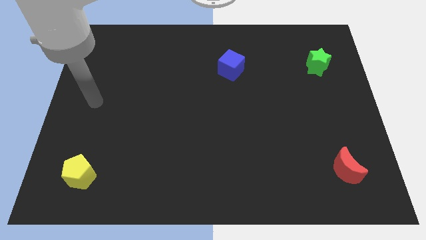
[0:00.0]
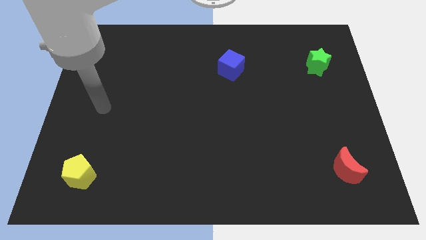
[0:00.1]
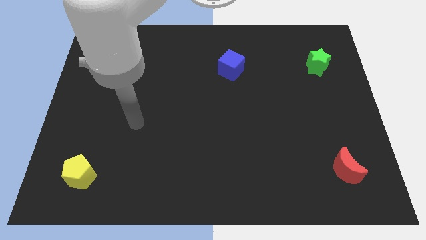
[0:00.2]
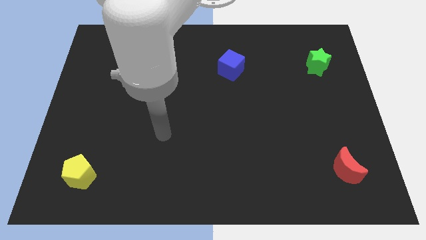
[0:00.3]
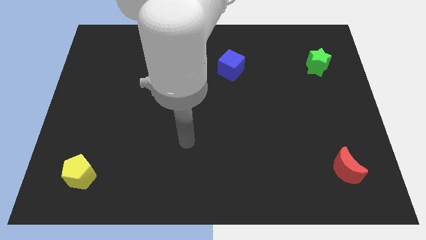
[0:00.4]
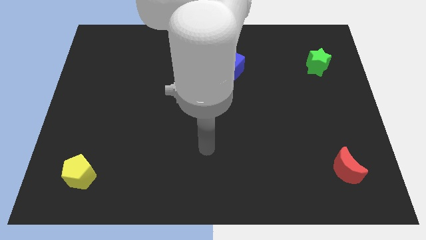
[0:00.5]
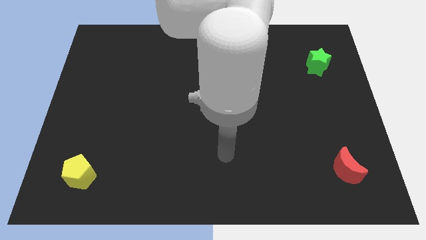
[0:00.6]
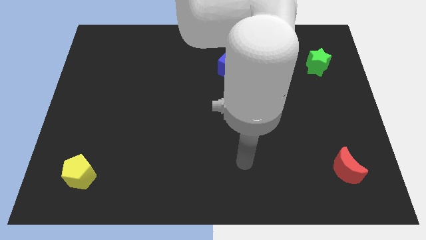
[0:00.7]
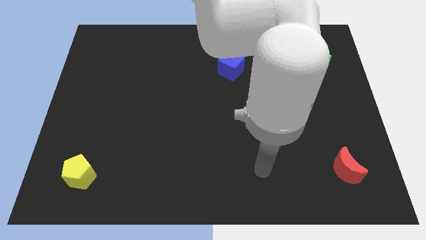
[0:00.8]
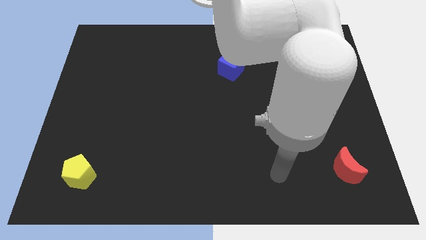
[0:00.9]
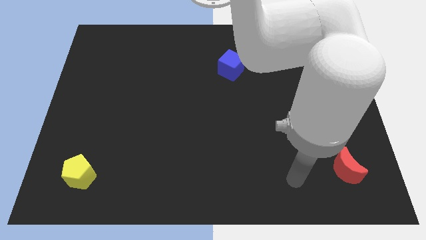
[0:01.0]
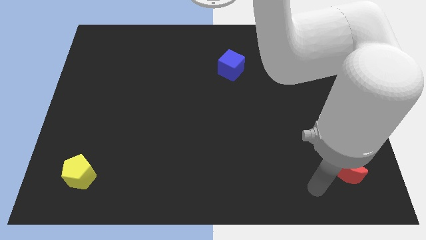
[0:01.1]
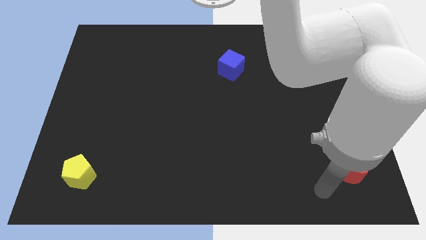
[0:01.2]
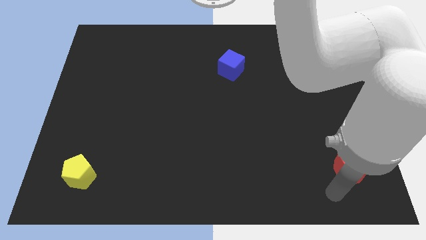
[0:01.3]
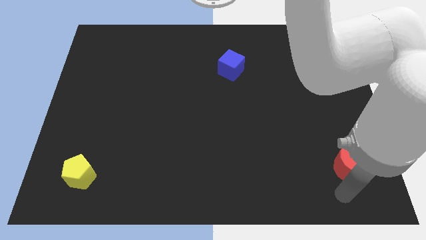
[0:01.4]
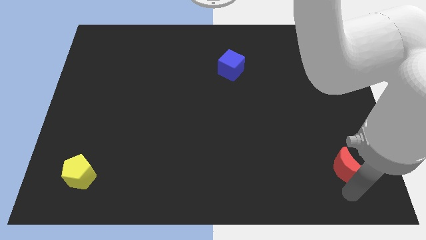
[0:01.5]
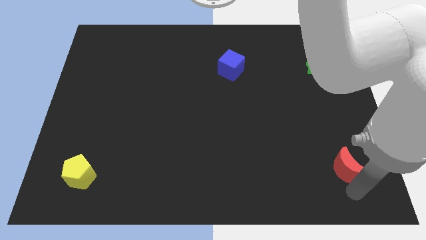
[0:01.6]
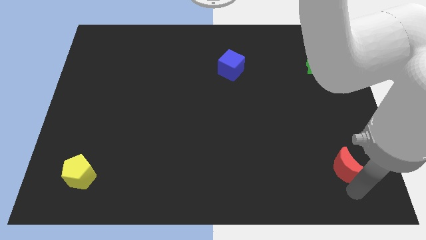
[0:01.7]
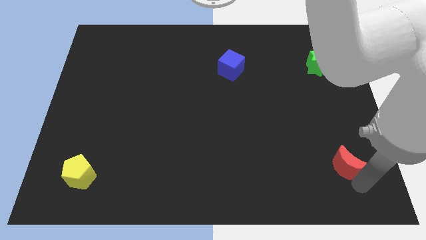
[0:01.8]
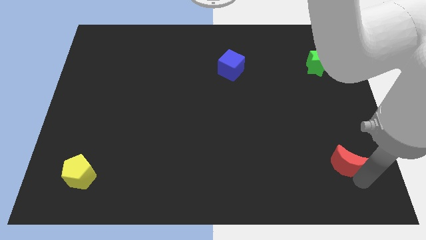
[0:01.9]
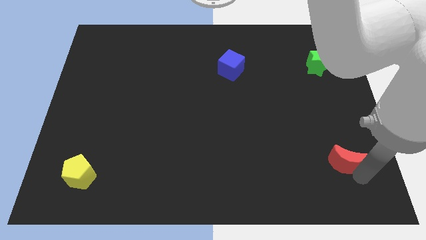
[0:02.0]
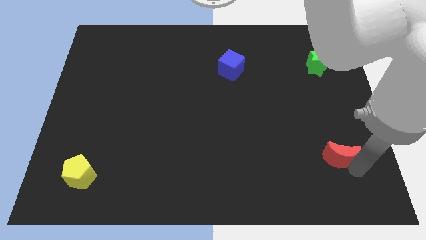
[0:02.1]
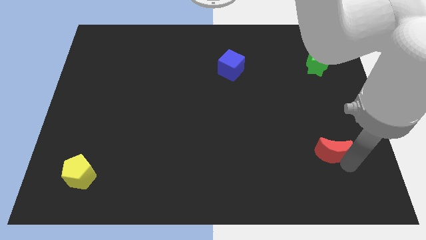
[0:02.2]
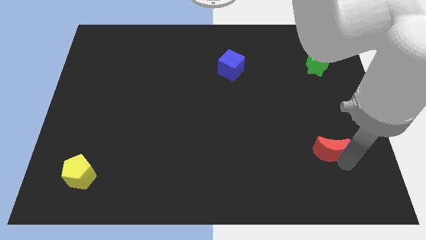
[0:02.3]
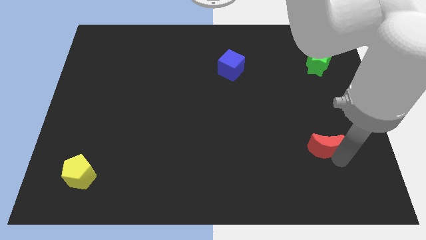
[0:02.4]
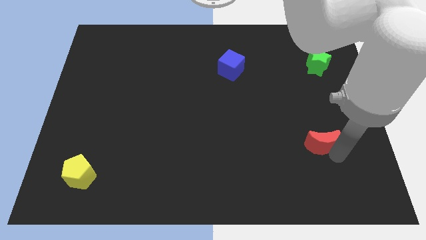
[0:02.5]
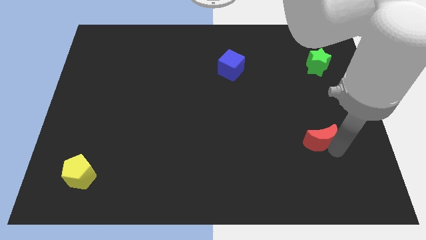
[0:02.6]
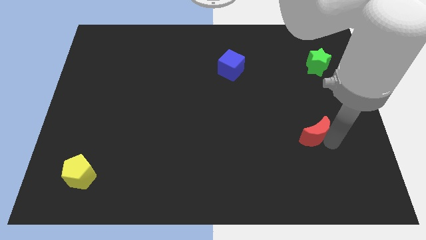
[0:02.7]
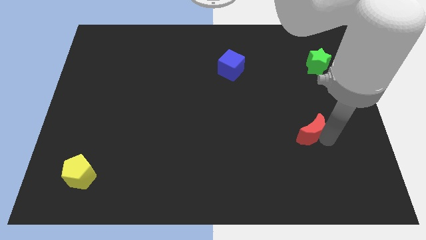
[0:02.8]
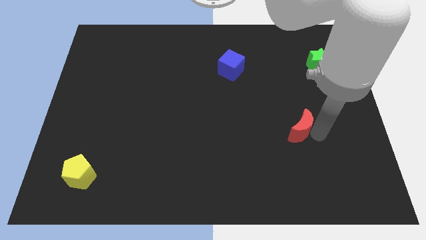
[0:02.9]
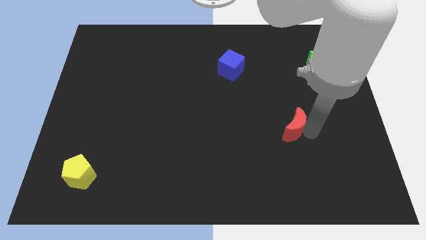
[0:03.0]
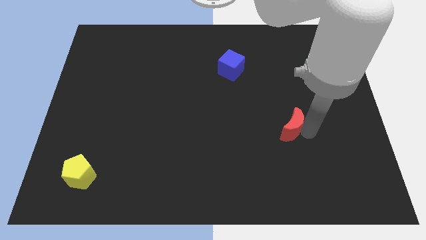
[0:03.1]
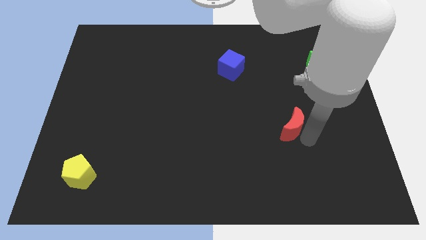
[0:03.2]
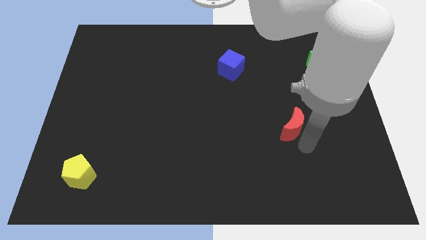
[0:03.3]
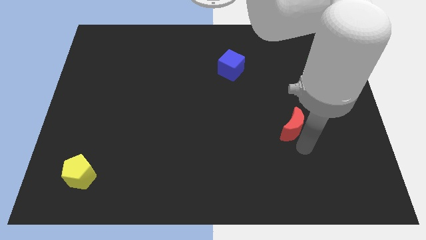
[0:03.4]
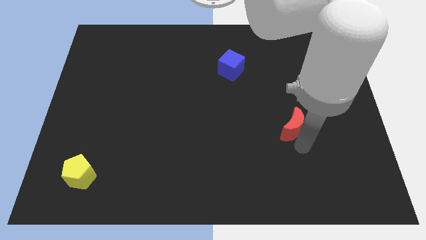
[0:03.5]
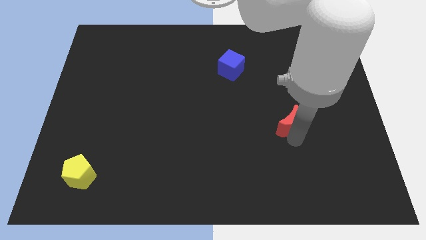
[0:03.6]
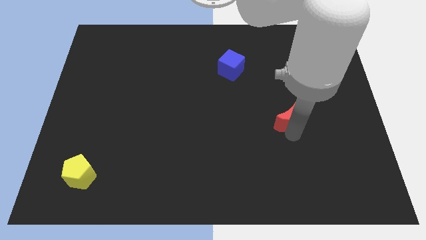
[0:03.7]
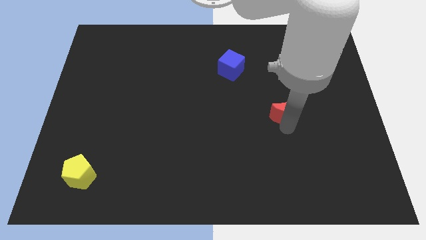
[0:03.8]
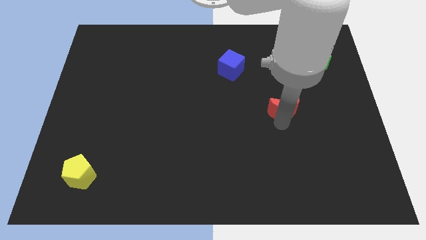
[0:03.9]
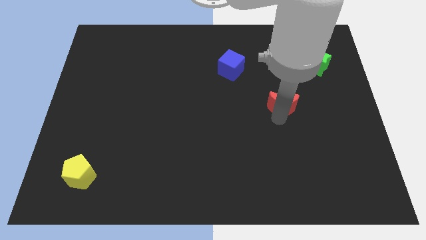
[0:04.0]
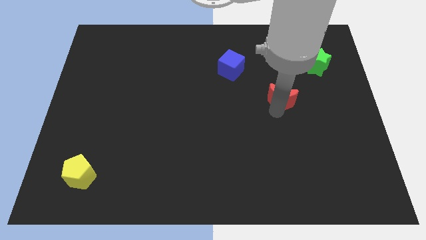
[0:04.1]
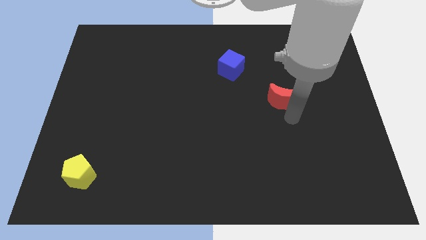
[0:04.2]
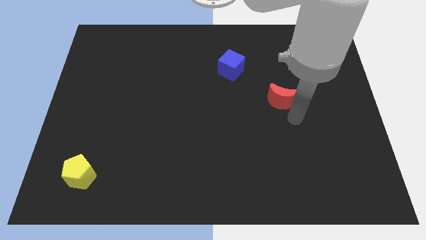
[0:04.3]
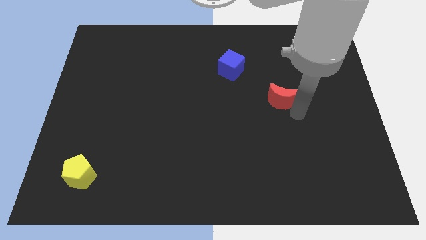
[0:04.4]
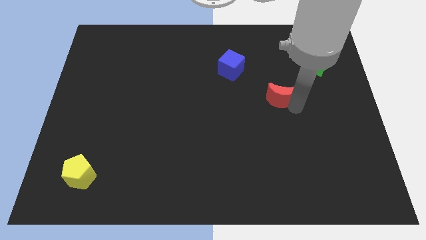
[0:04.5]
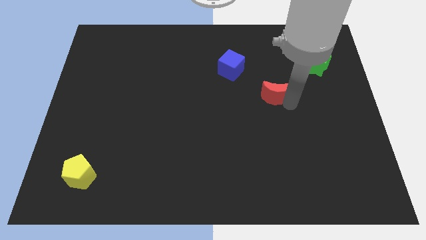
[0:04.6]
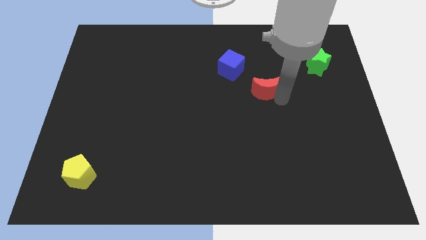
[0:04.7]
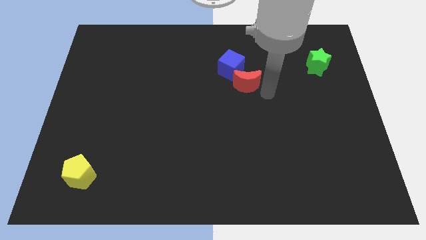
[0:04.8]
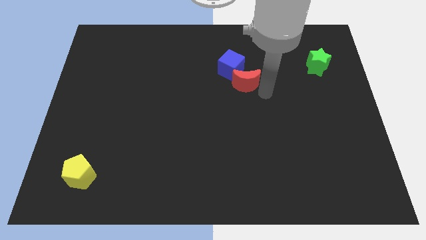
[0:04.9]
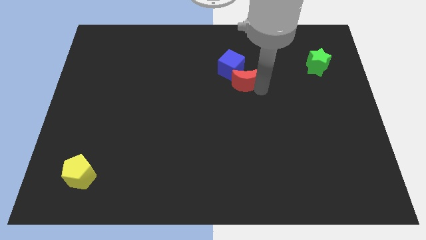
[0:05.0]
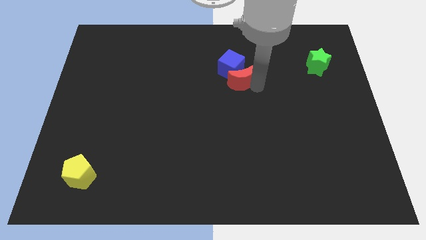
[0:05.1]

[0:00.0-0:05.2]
slide the moon next to the blue block

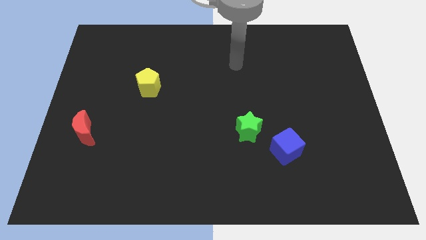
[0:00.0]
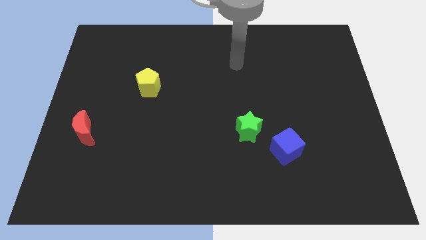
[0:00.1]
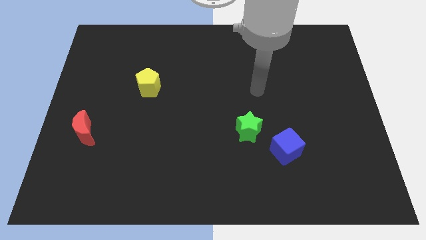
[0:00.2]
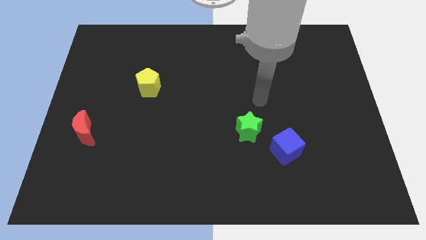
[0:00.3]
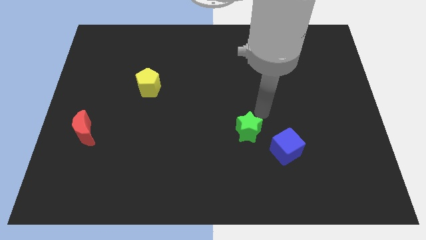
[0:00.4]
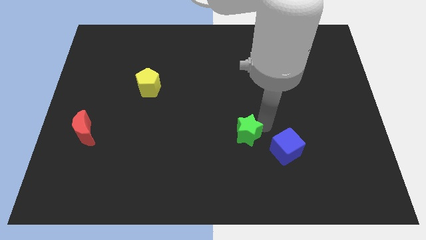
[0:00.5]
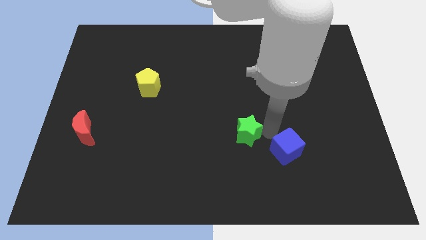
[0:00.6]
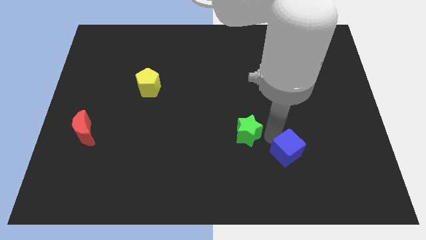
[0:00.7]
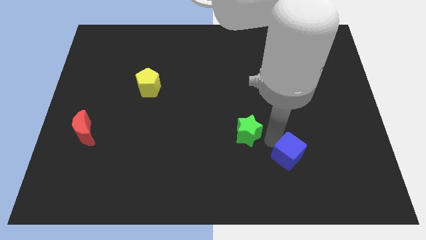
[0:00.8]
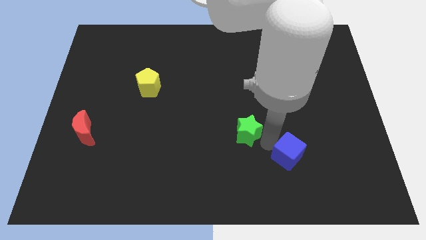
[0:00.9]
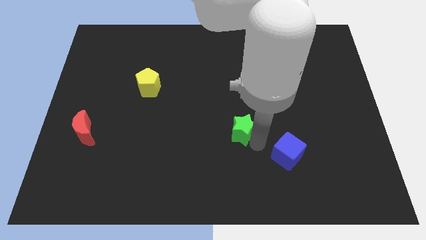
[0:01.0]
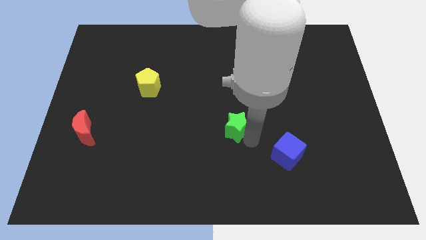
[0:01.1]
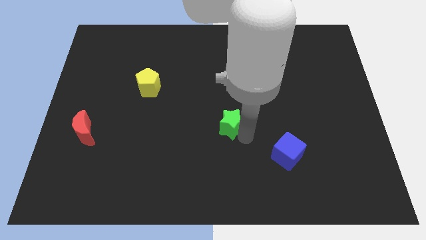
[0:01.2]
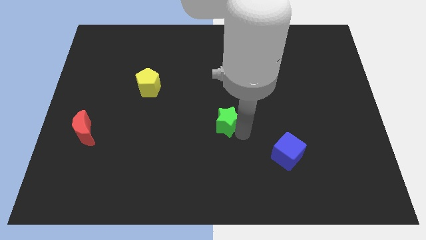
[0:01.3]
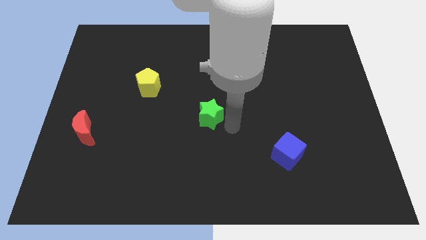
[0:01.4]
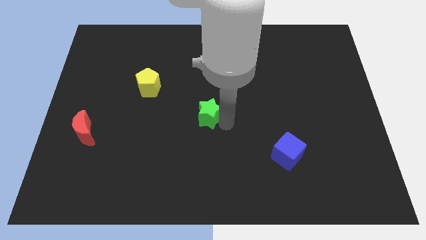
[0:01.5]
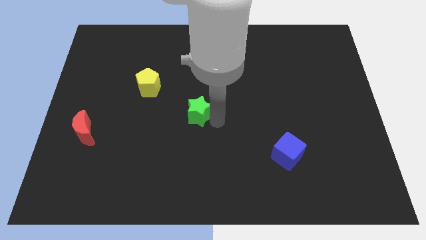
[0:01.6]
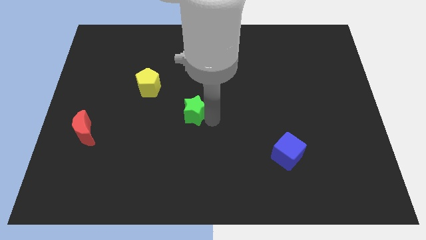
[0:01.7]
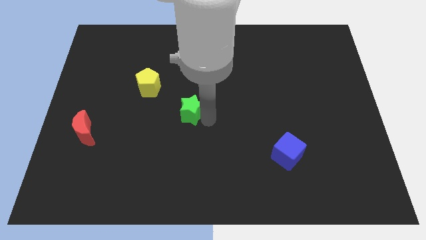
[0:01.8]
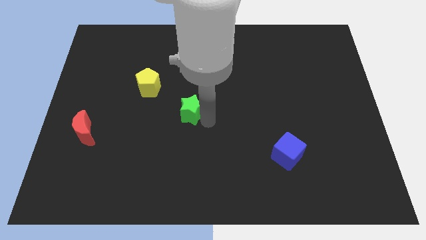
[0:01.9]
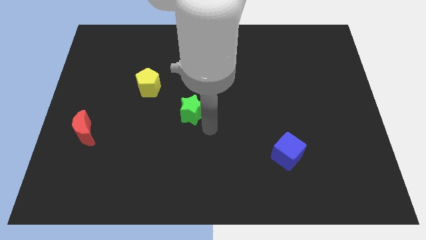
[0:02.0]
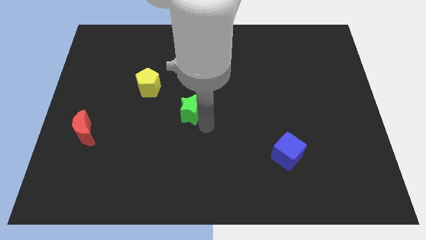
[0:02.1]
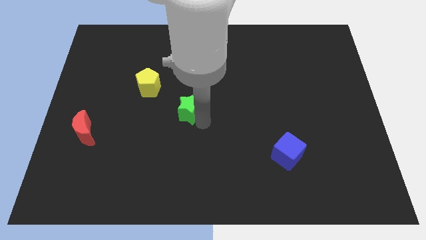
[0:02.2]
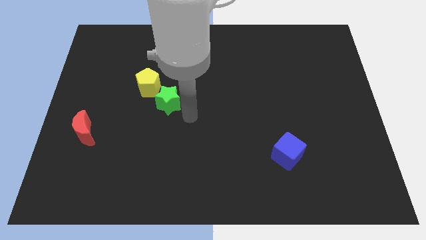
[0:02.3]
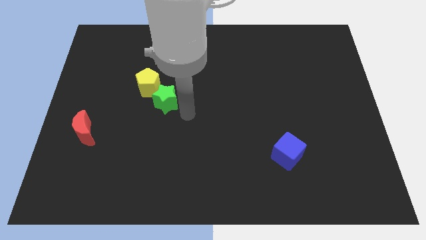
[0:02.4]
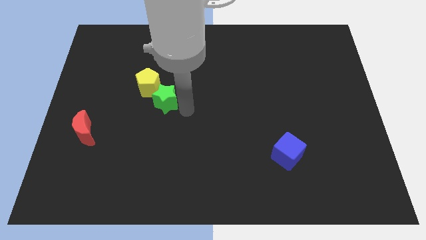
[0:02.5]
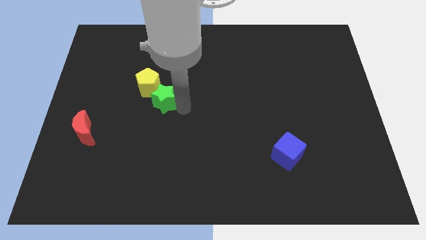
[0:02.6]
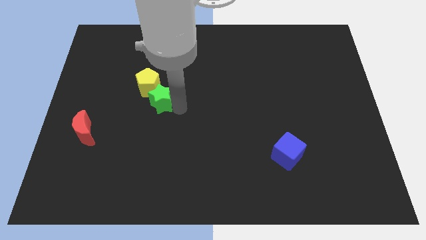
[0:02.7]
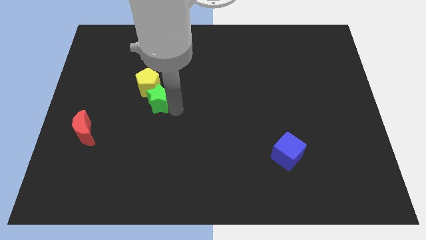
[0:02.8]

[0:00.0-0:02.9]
put the green block towards the yellow block

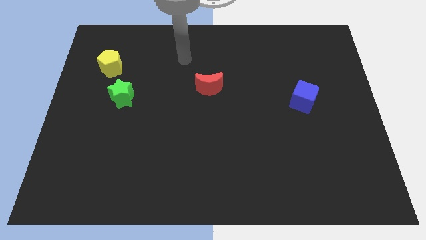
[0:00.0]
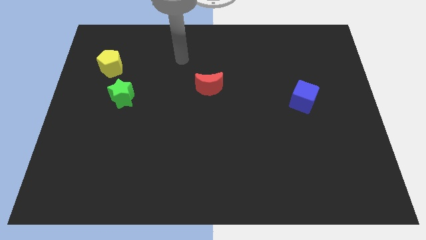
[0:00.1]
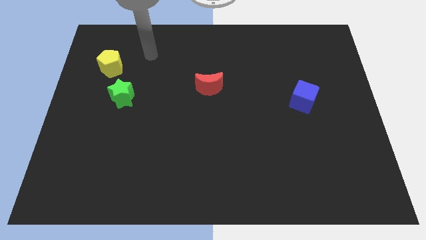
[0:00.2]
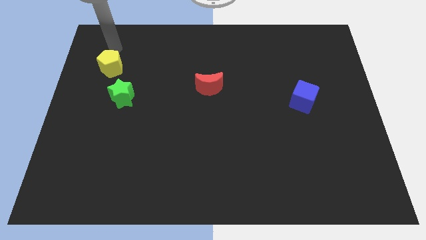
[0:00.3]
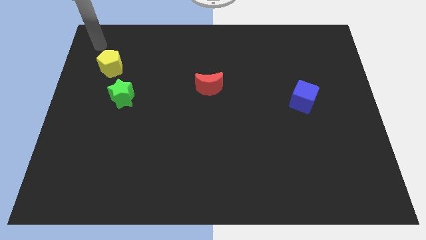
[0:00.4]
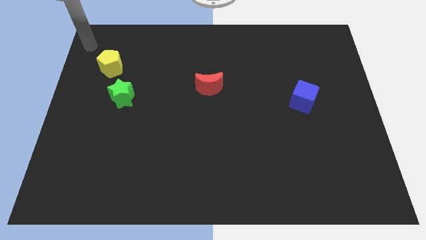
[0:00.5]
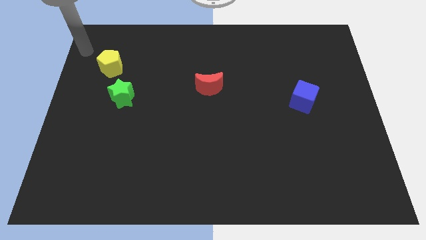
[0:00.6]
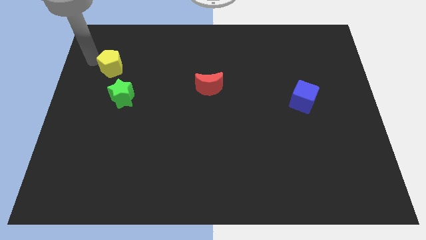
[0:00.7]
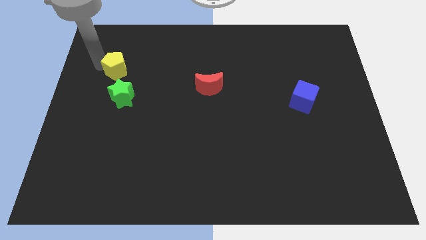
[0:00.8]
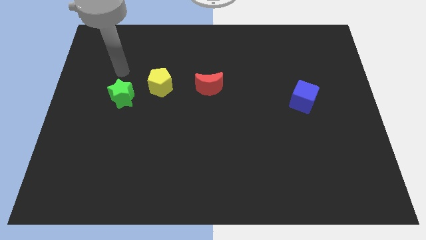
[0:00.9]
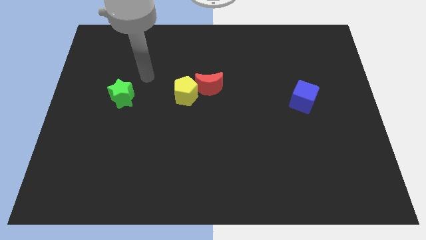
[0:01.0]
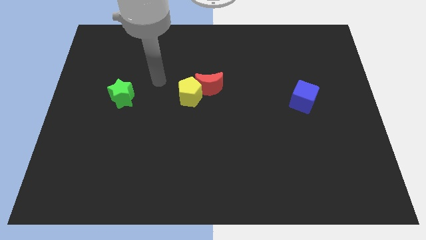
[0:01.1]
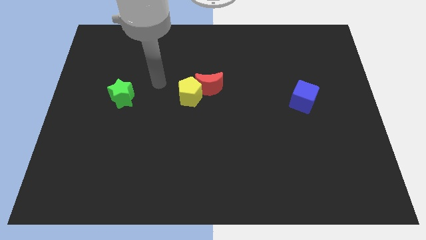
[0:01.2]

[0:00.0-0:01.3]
move the yellow block to the red block
